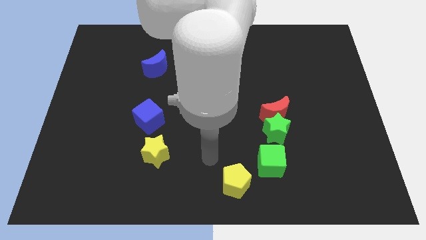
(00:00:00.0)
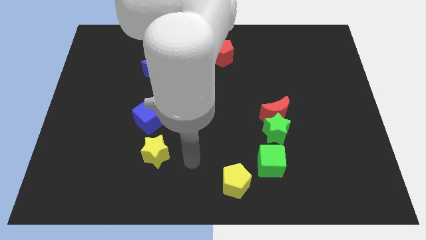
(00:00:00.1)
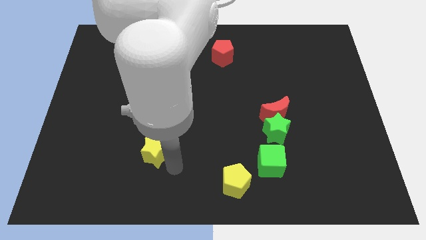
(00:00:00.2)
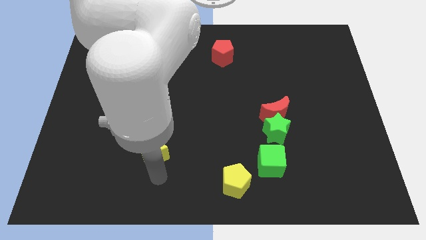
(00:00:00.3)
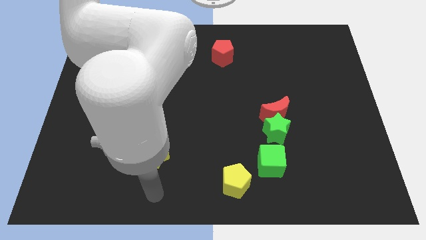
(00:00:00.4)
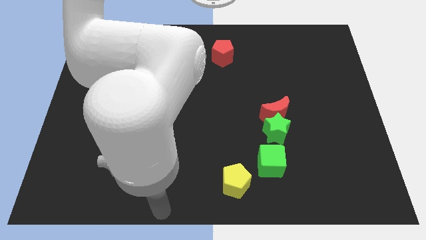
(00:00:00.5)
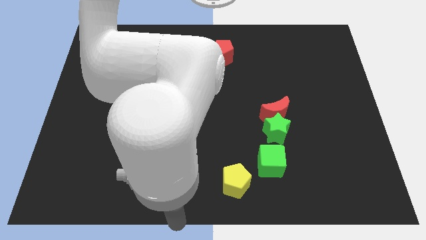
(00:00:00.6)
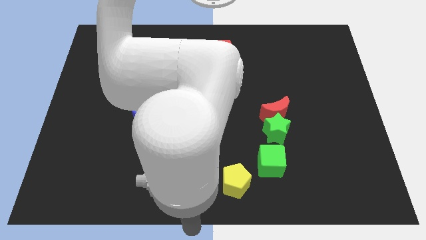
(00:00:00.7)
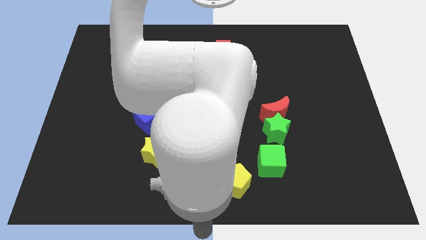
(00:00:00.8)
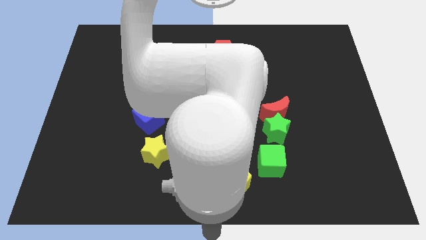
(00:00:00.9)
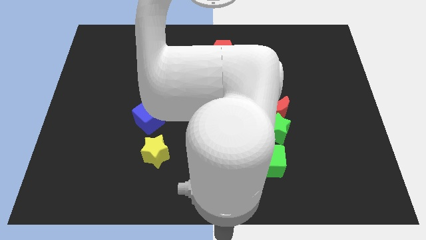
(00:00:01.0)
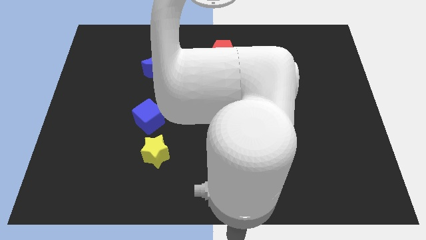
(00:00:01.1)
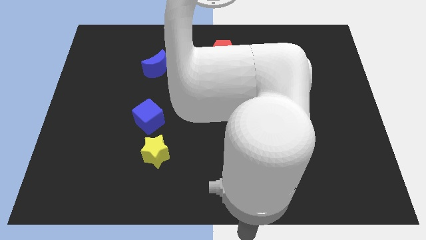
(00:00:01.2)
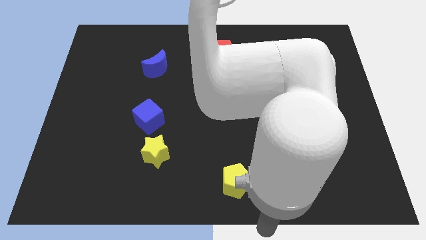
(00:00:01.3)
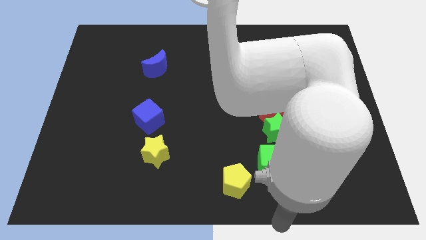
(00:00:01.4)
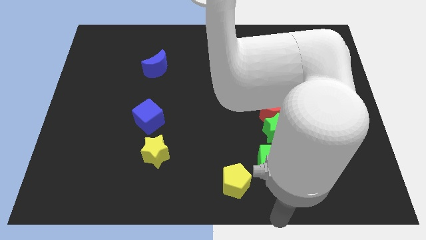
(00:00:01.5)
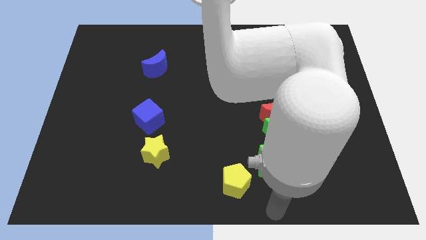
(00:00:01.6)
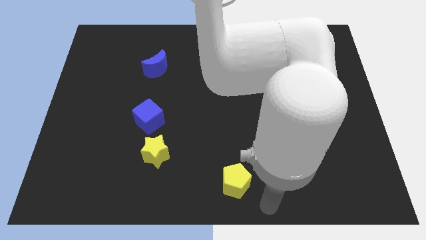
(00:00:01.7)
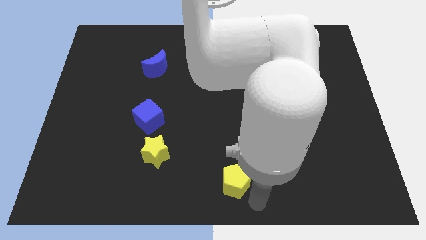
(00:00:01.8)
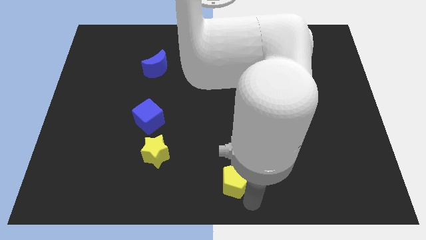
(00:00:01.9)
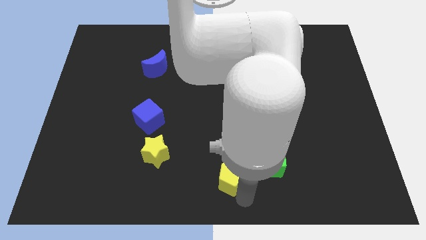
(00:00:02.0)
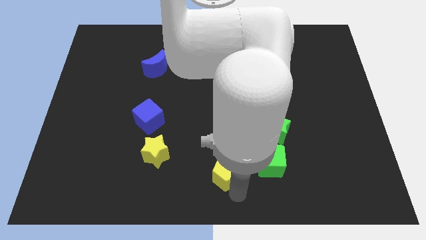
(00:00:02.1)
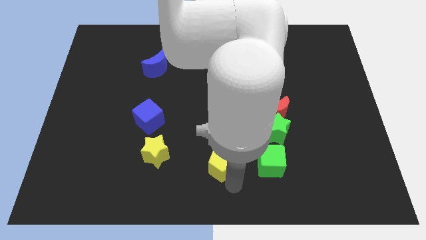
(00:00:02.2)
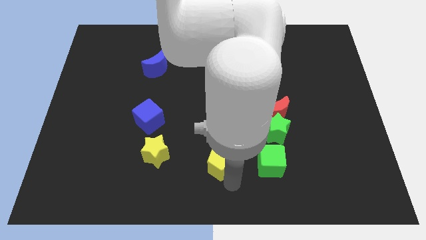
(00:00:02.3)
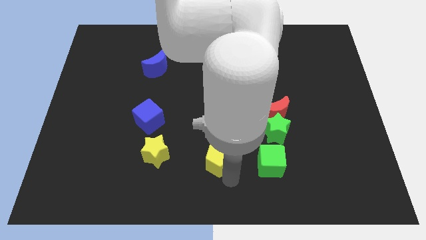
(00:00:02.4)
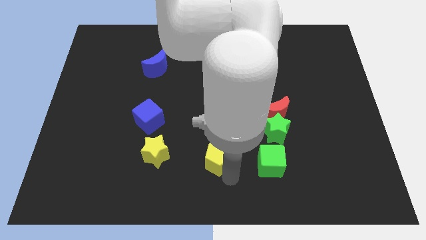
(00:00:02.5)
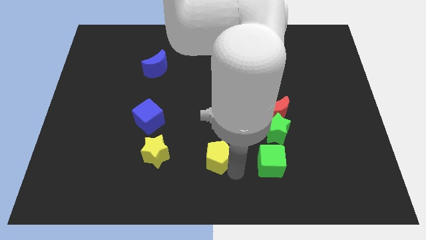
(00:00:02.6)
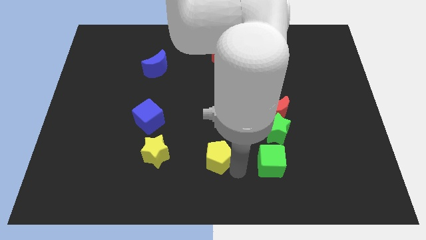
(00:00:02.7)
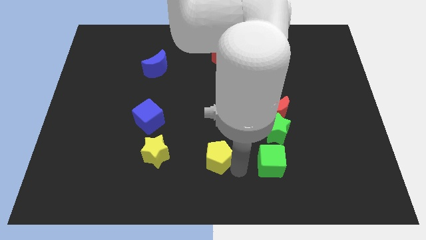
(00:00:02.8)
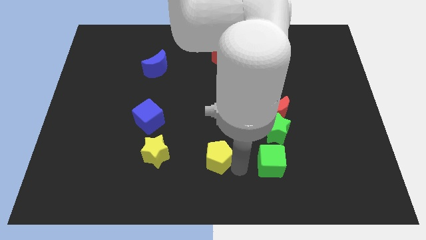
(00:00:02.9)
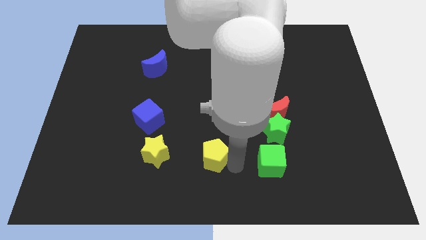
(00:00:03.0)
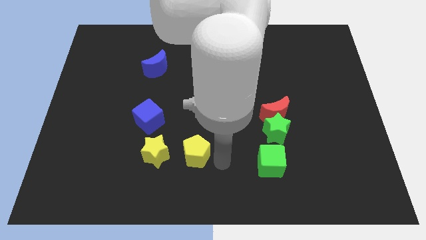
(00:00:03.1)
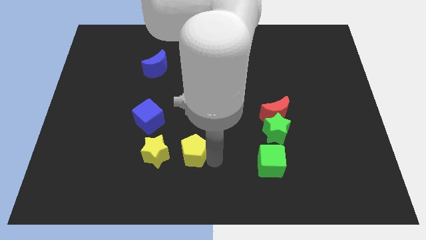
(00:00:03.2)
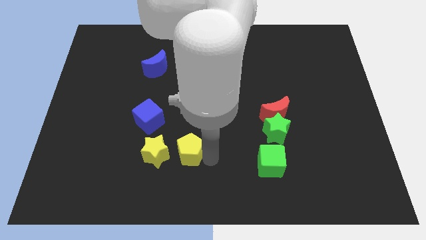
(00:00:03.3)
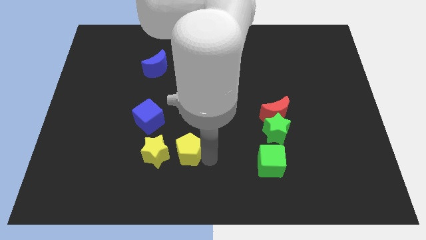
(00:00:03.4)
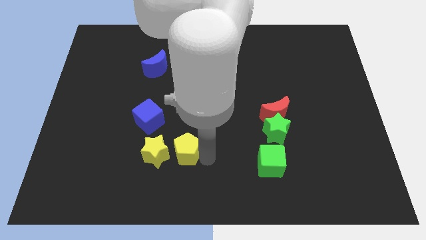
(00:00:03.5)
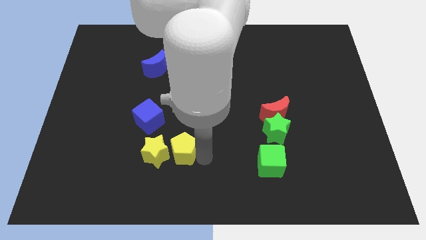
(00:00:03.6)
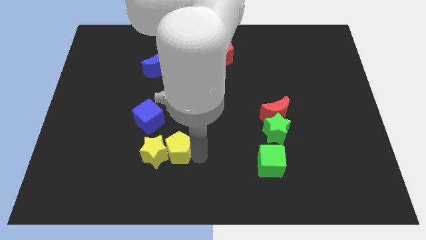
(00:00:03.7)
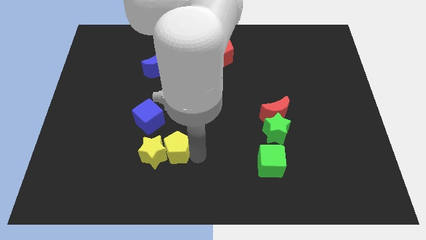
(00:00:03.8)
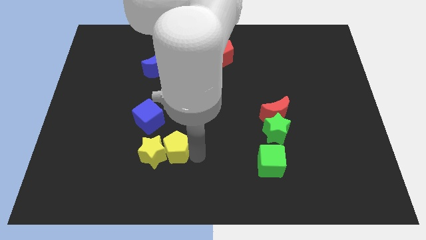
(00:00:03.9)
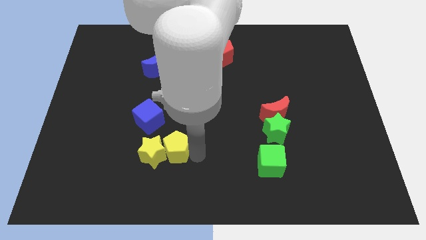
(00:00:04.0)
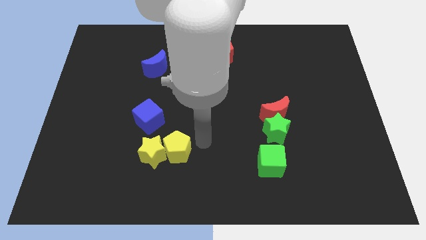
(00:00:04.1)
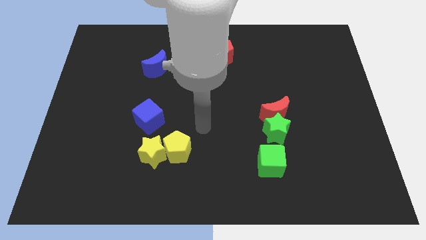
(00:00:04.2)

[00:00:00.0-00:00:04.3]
push the yellow pentagon into the yellow star

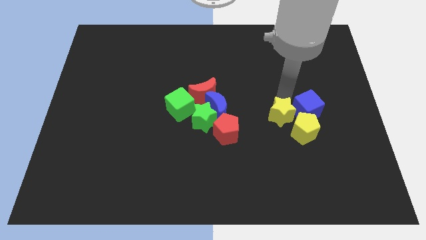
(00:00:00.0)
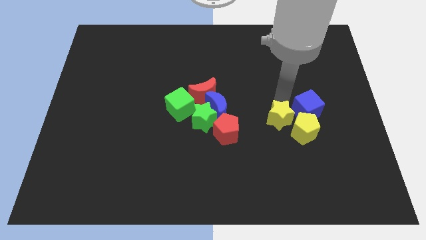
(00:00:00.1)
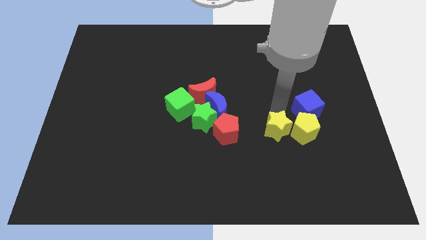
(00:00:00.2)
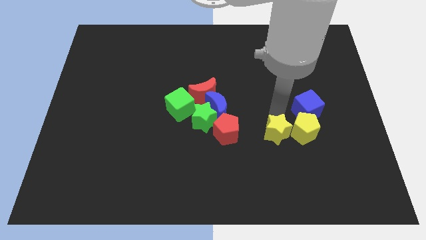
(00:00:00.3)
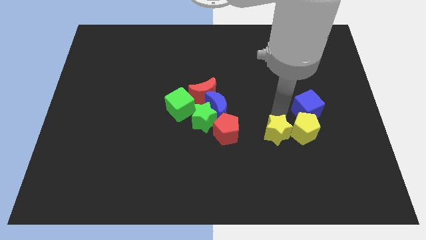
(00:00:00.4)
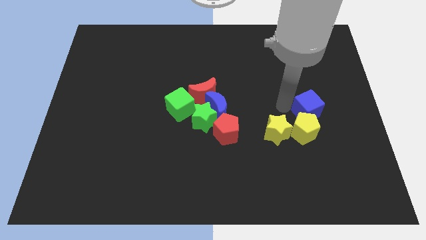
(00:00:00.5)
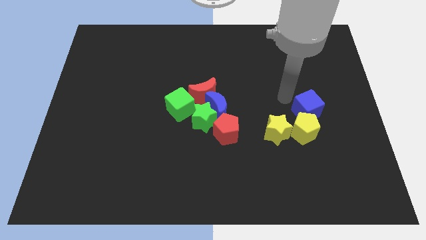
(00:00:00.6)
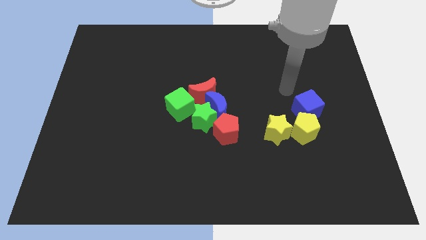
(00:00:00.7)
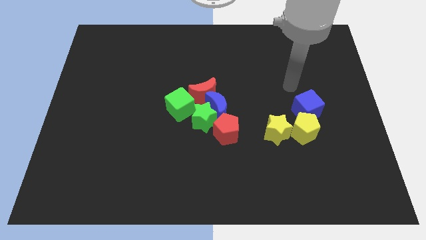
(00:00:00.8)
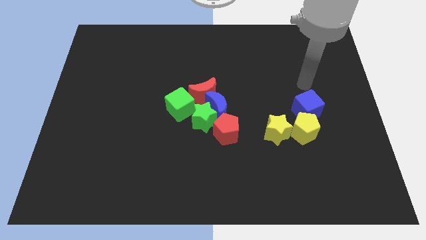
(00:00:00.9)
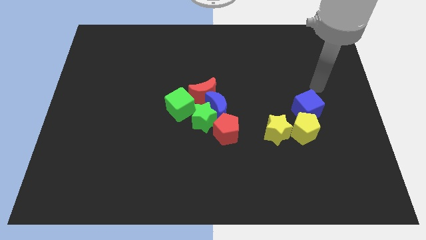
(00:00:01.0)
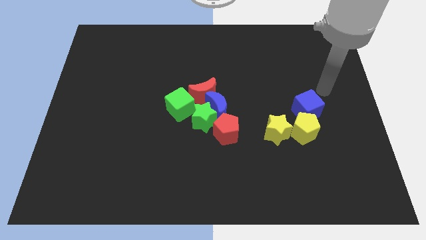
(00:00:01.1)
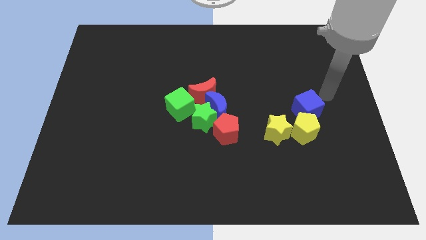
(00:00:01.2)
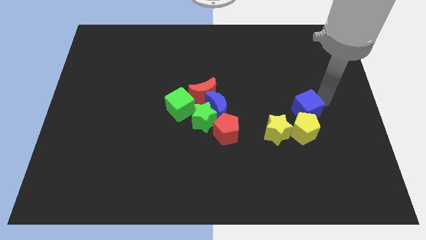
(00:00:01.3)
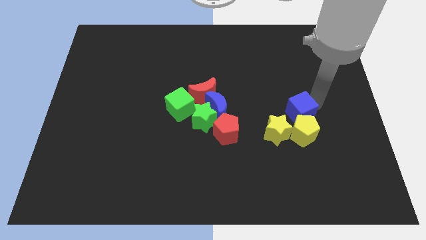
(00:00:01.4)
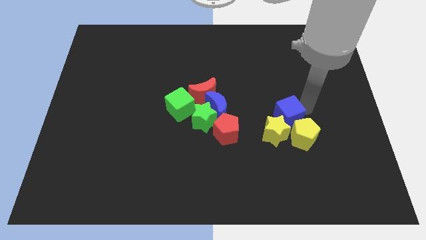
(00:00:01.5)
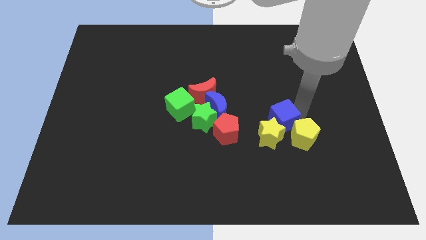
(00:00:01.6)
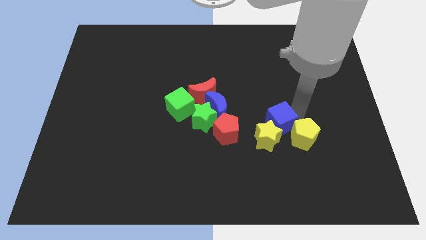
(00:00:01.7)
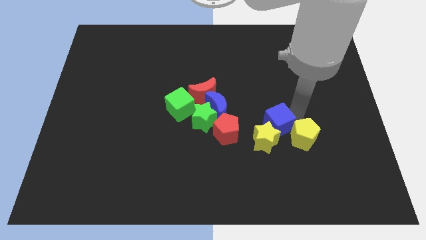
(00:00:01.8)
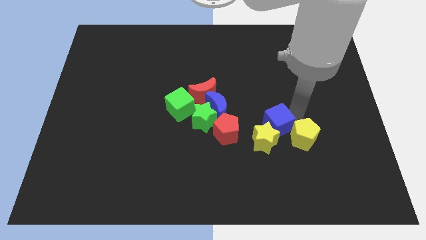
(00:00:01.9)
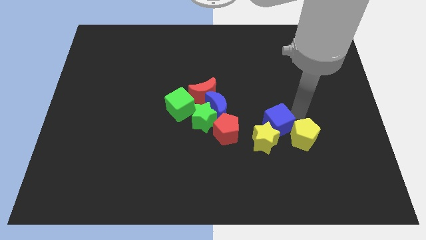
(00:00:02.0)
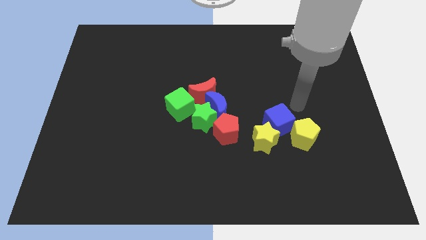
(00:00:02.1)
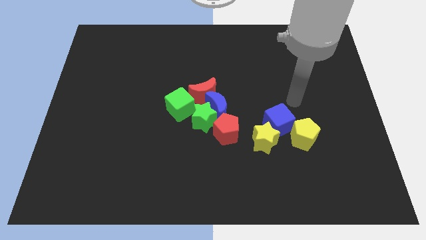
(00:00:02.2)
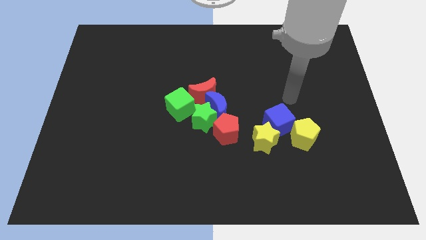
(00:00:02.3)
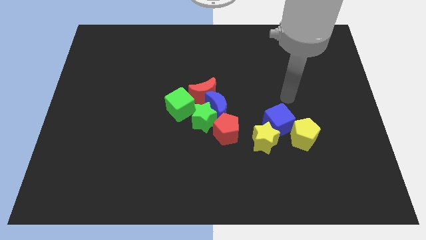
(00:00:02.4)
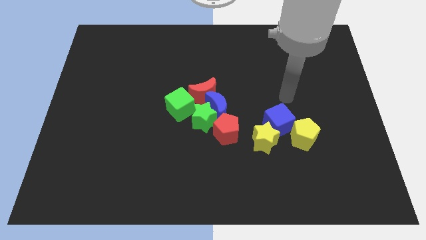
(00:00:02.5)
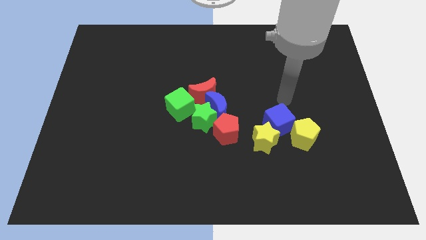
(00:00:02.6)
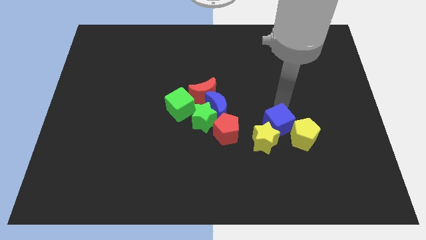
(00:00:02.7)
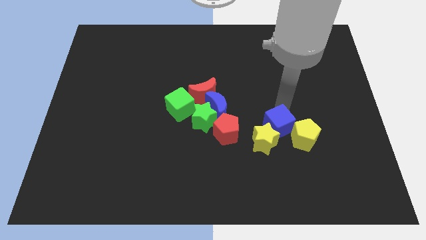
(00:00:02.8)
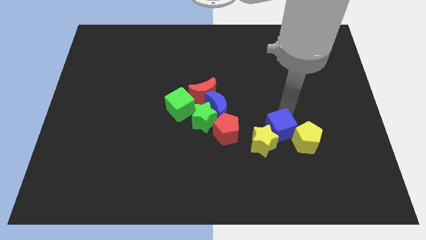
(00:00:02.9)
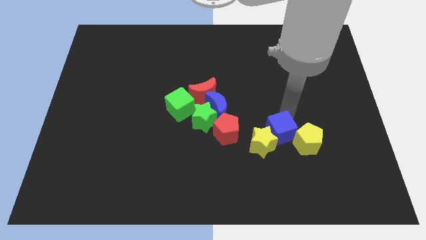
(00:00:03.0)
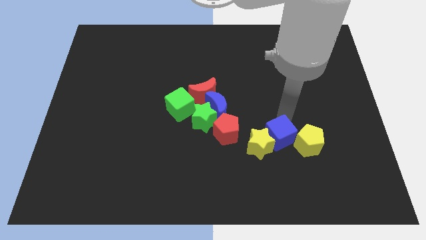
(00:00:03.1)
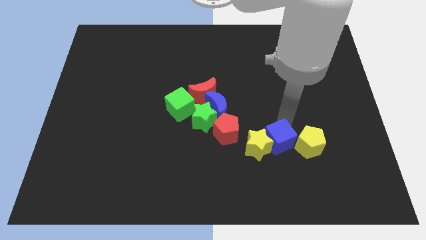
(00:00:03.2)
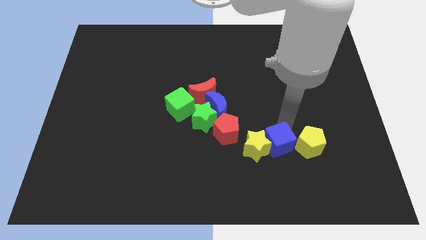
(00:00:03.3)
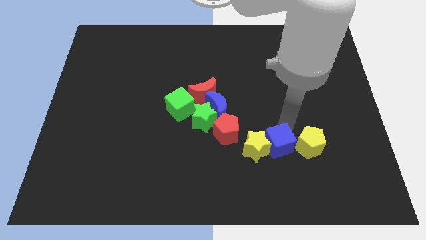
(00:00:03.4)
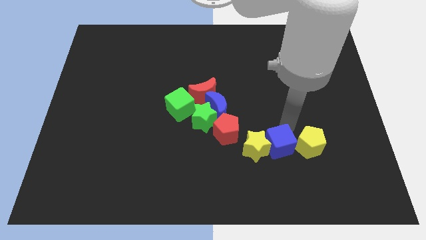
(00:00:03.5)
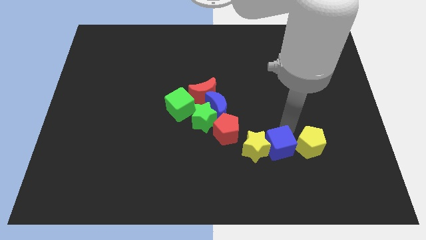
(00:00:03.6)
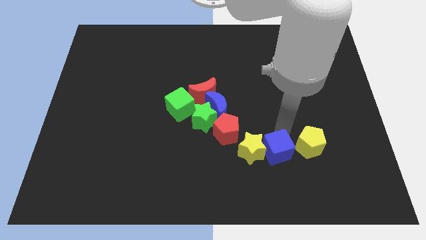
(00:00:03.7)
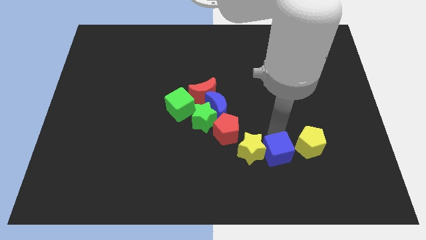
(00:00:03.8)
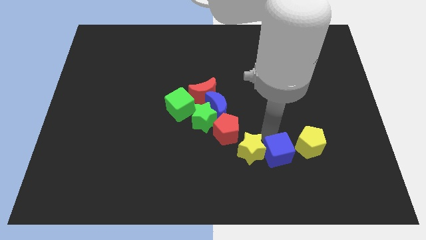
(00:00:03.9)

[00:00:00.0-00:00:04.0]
push the yellow star right side to the red pentagon

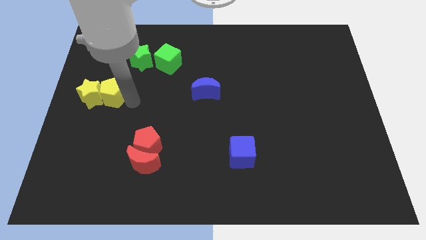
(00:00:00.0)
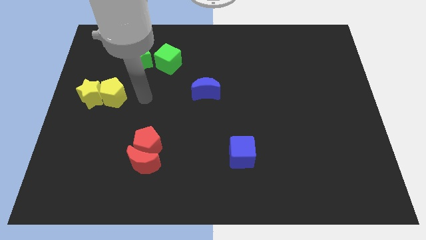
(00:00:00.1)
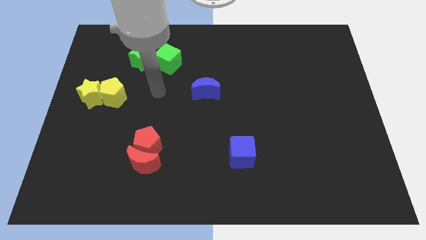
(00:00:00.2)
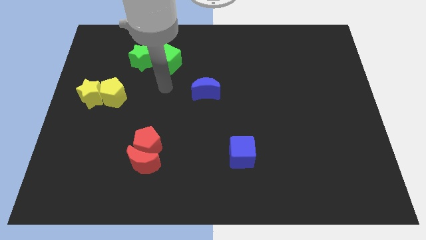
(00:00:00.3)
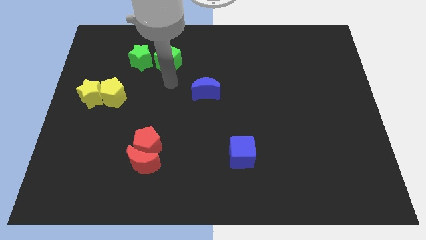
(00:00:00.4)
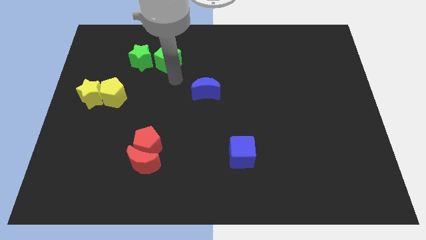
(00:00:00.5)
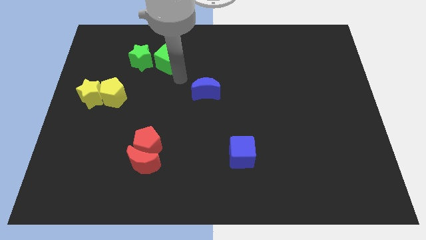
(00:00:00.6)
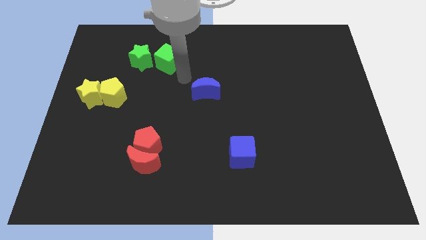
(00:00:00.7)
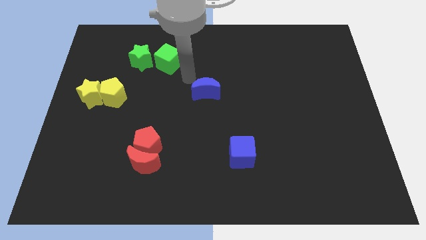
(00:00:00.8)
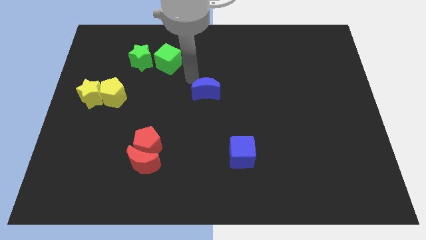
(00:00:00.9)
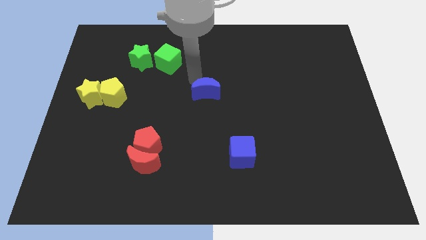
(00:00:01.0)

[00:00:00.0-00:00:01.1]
point your arm at the top of the blue crescent
